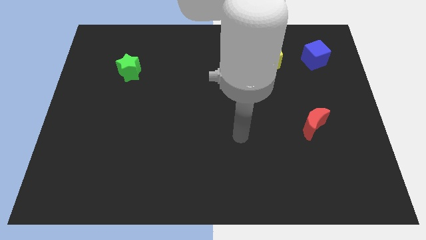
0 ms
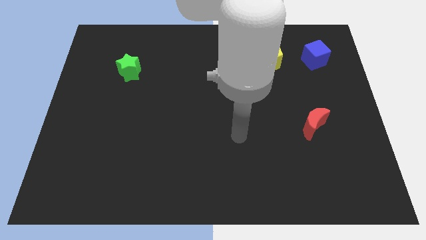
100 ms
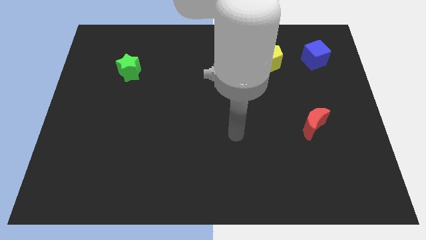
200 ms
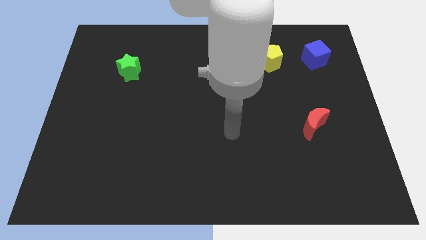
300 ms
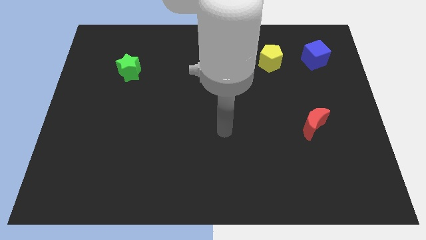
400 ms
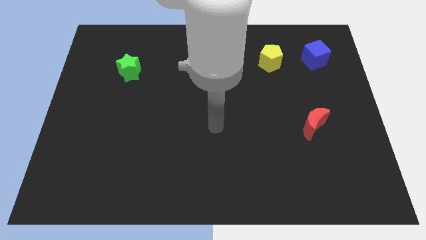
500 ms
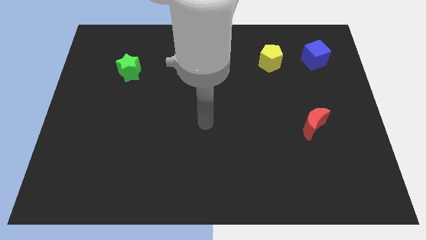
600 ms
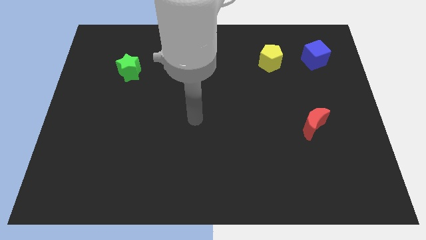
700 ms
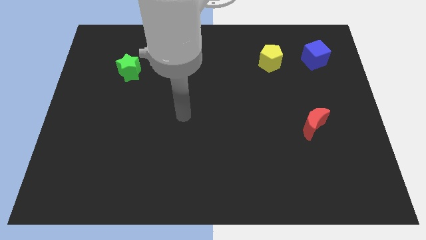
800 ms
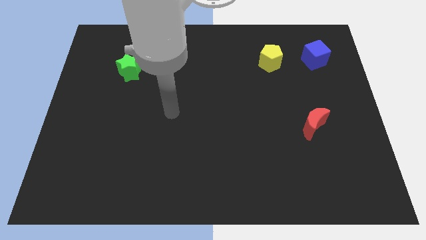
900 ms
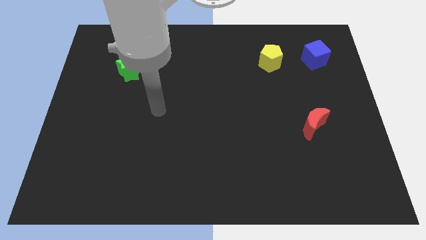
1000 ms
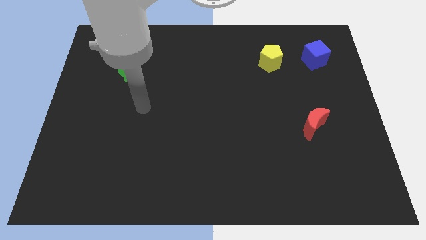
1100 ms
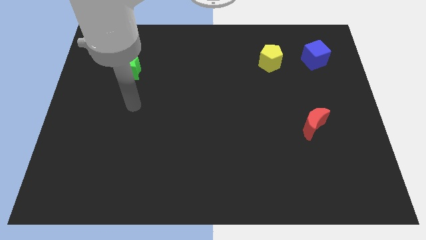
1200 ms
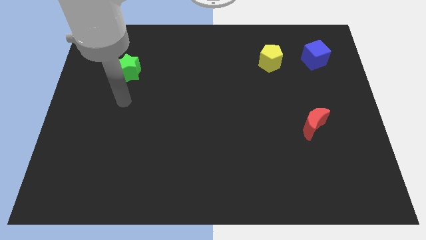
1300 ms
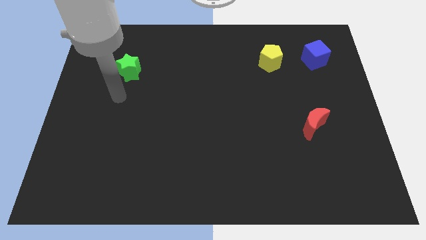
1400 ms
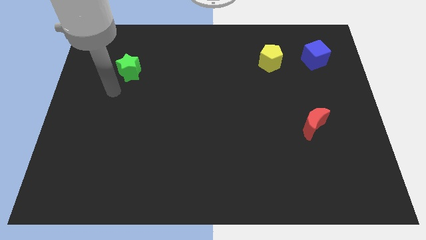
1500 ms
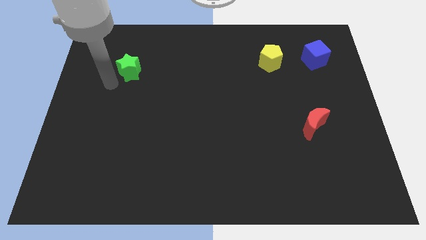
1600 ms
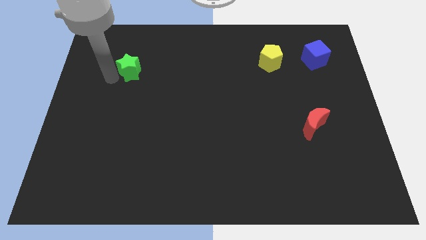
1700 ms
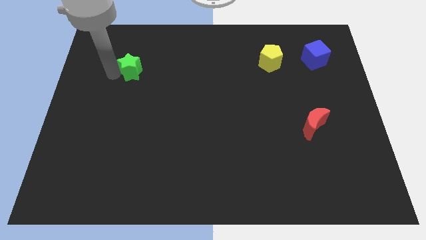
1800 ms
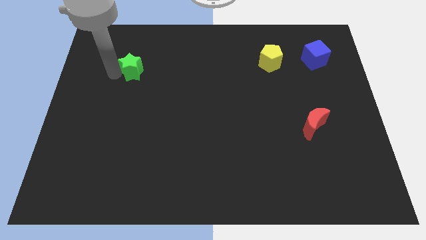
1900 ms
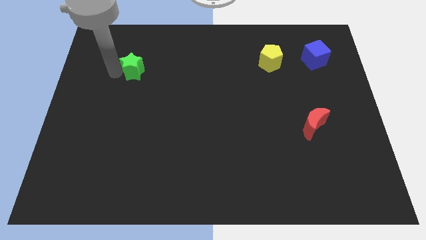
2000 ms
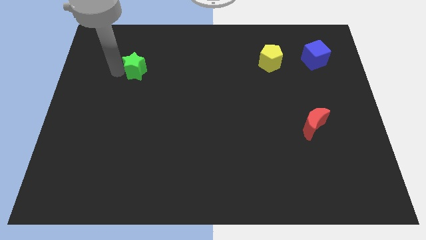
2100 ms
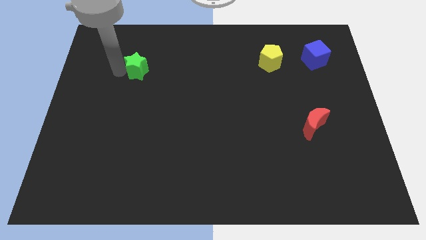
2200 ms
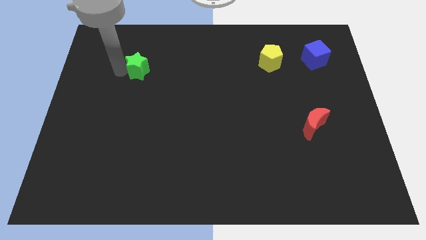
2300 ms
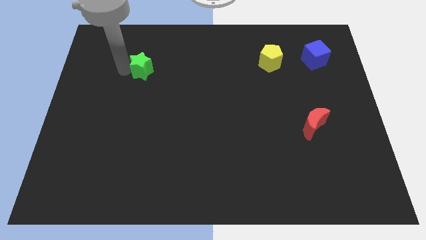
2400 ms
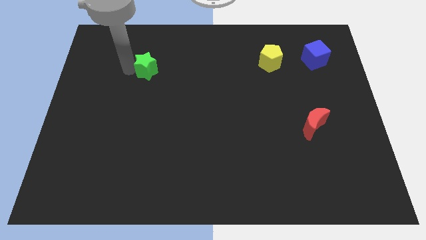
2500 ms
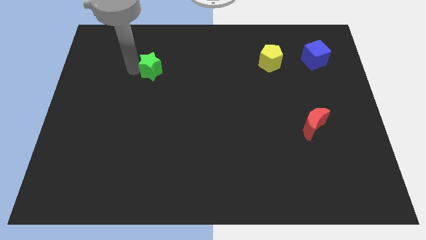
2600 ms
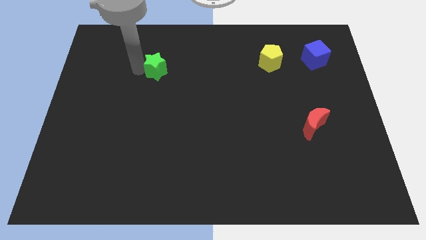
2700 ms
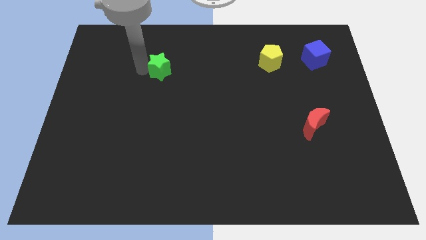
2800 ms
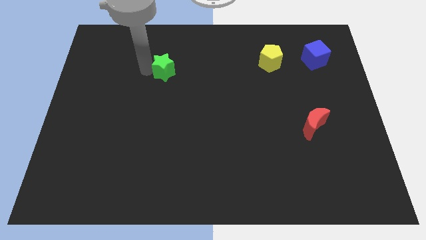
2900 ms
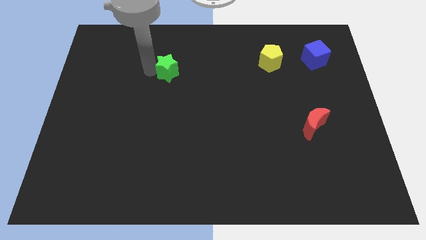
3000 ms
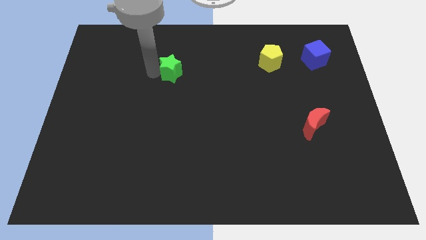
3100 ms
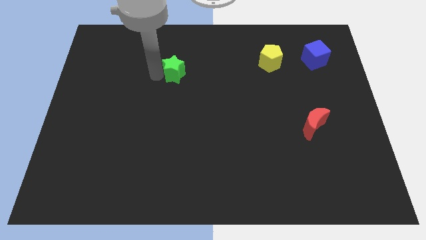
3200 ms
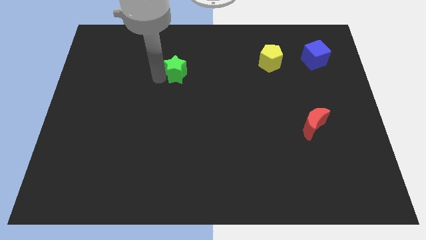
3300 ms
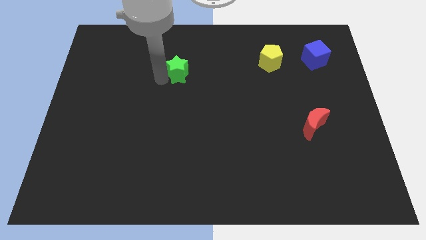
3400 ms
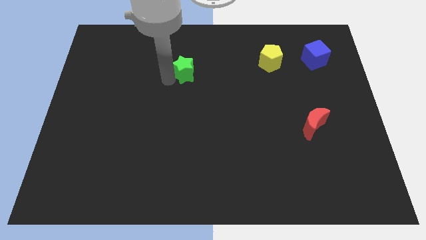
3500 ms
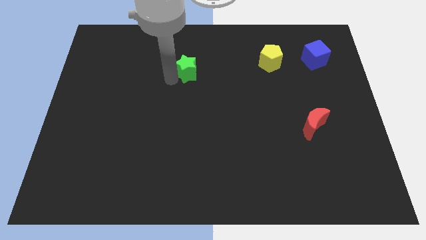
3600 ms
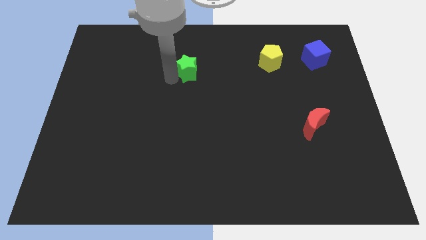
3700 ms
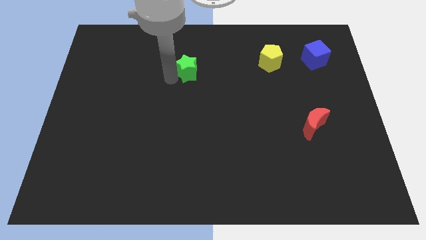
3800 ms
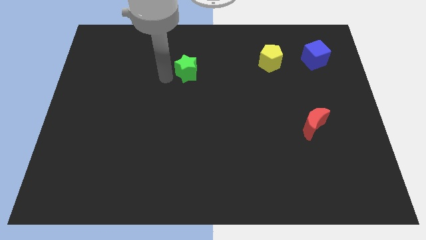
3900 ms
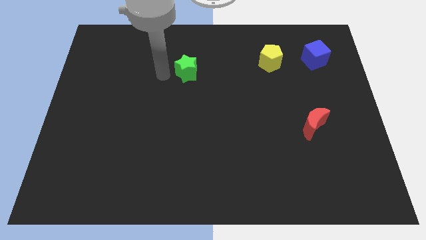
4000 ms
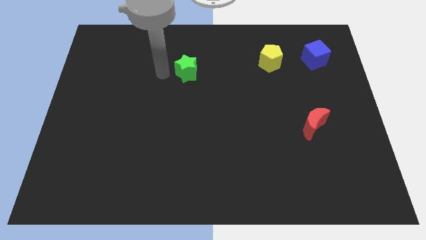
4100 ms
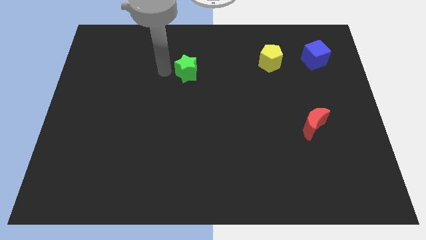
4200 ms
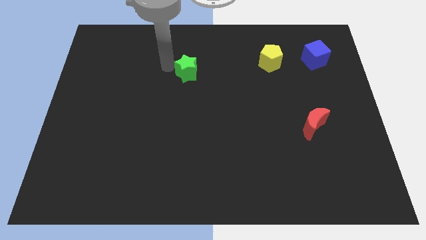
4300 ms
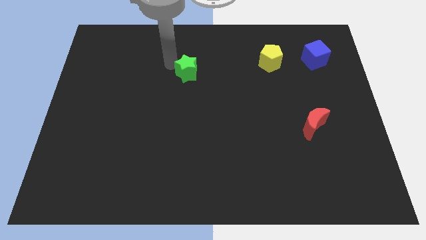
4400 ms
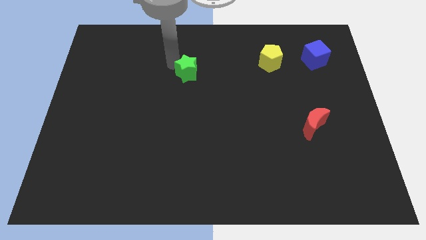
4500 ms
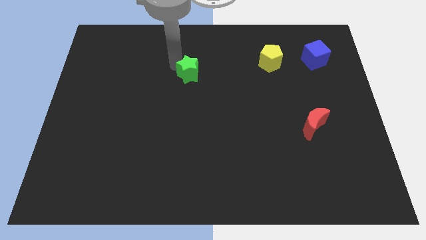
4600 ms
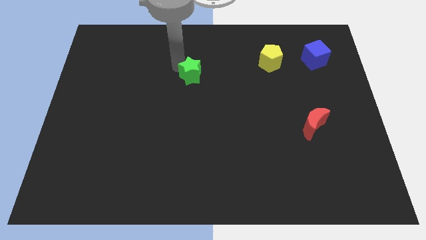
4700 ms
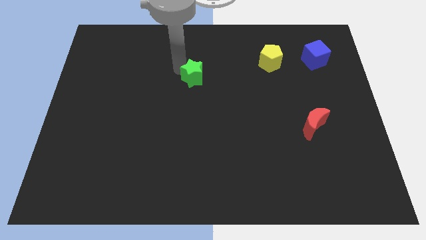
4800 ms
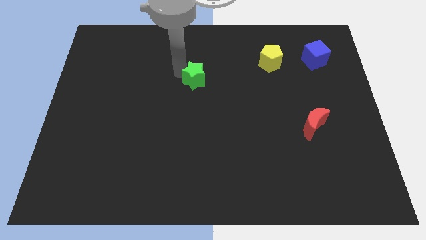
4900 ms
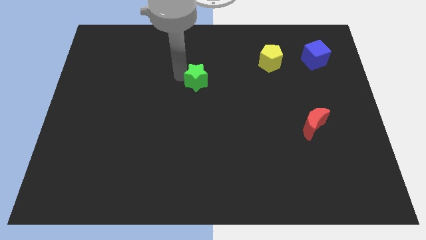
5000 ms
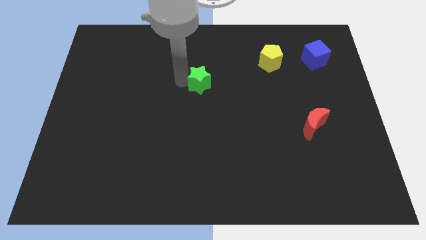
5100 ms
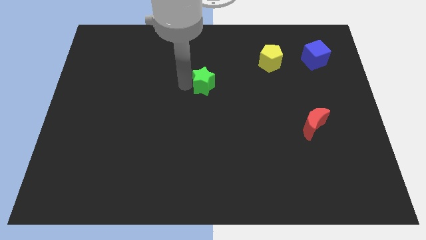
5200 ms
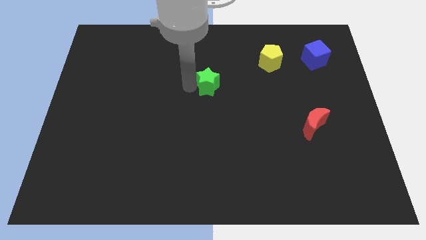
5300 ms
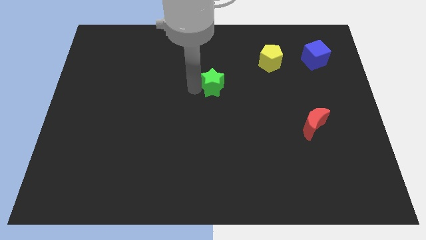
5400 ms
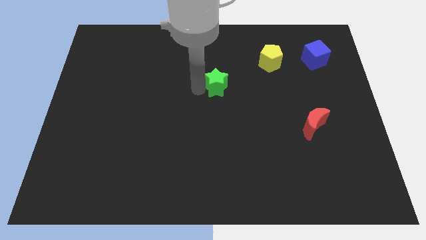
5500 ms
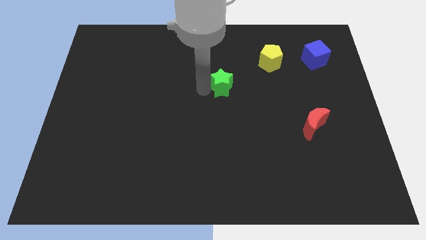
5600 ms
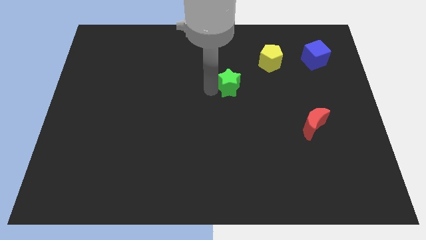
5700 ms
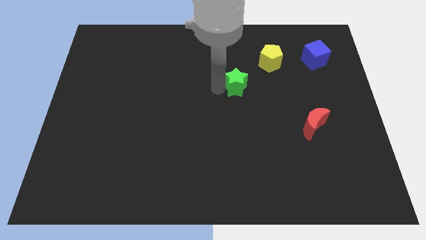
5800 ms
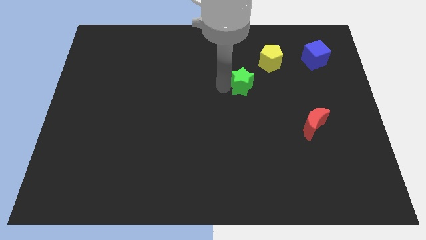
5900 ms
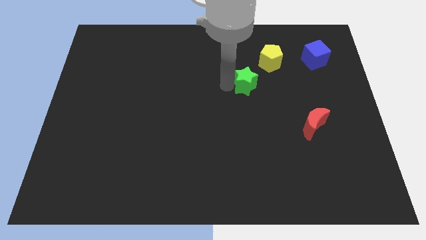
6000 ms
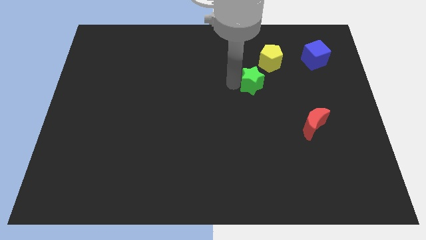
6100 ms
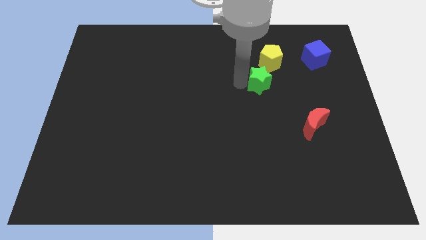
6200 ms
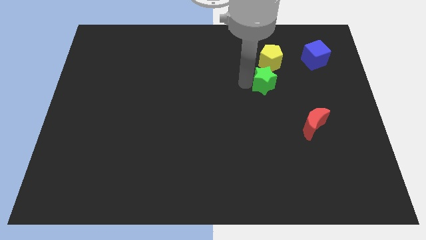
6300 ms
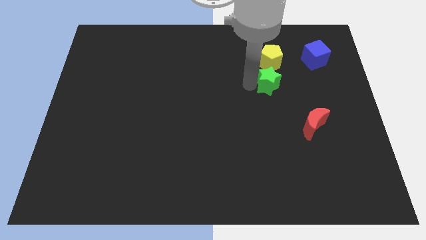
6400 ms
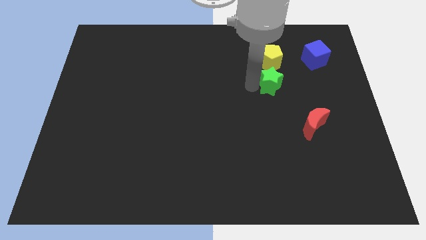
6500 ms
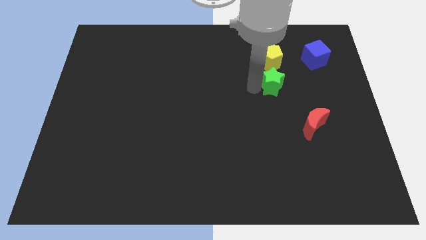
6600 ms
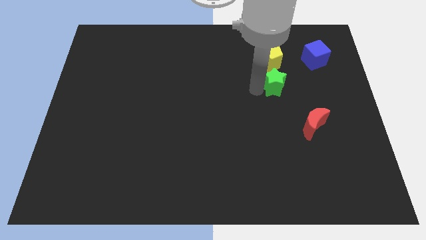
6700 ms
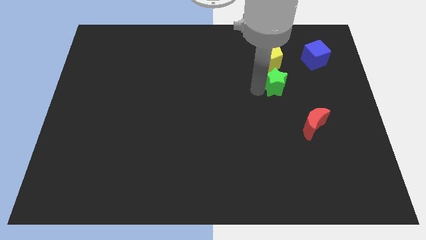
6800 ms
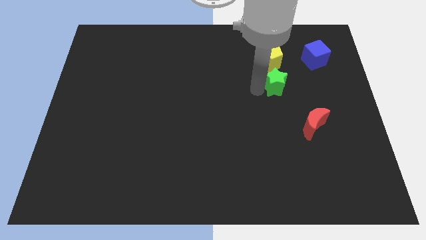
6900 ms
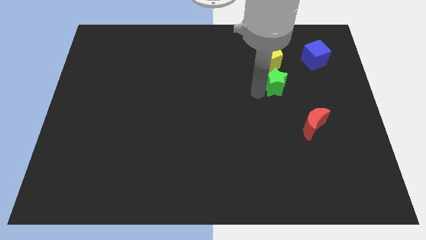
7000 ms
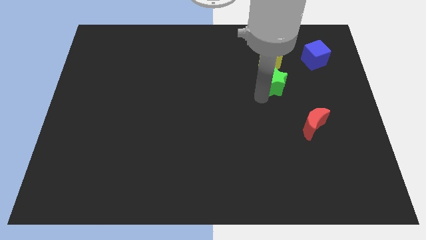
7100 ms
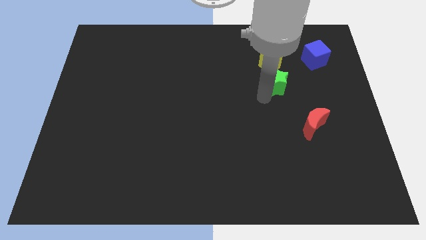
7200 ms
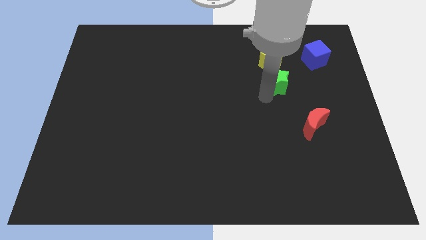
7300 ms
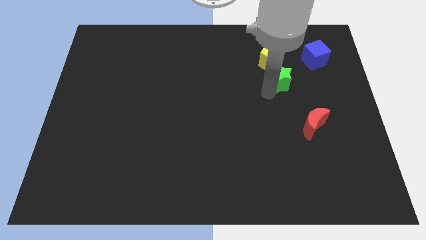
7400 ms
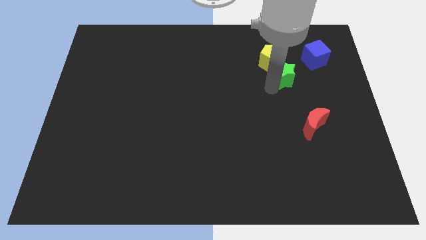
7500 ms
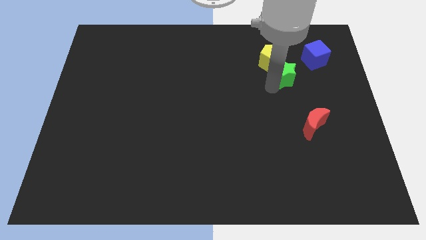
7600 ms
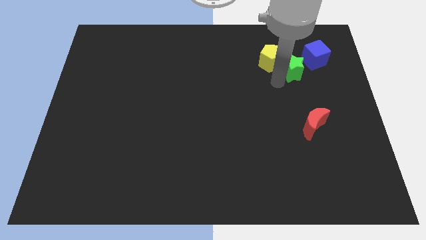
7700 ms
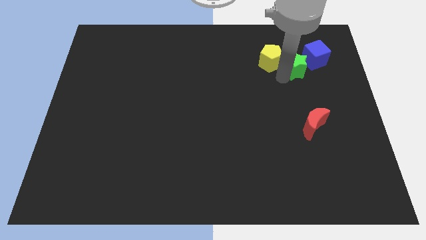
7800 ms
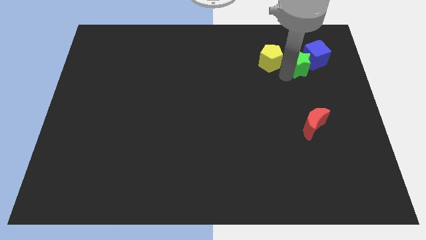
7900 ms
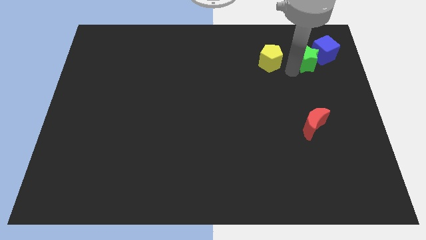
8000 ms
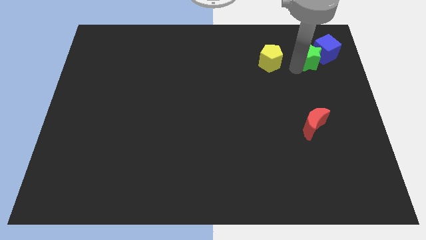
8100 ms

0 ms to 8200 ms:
push the star towards the blue block

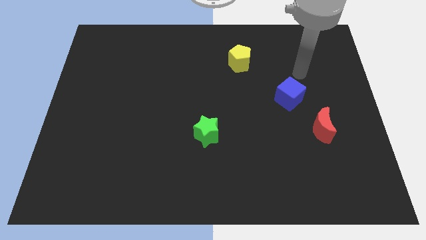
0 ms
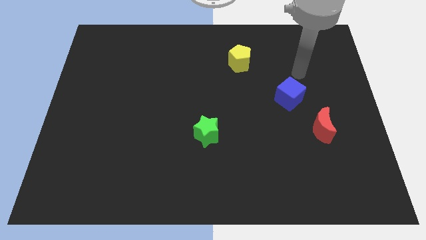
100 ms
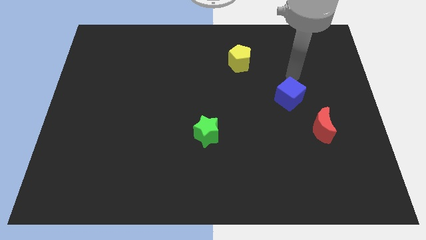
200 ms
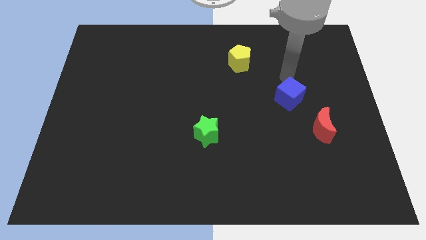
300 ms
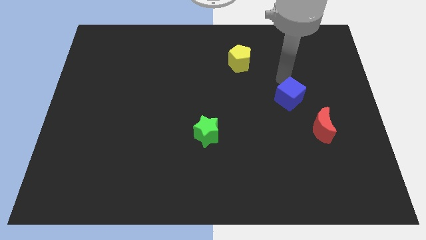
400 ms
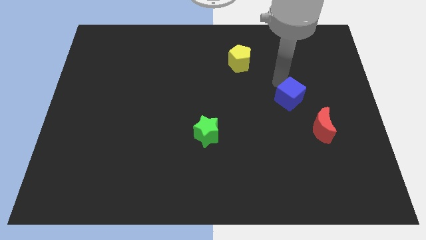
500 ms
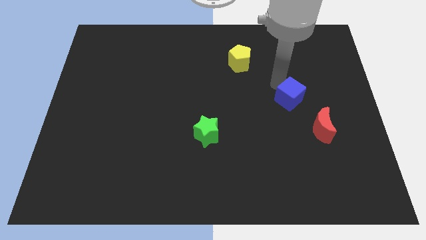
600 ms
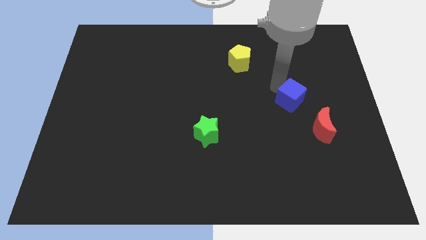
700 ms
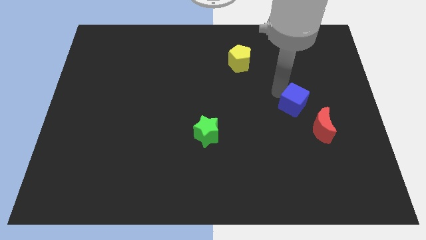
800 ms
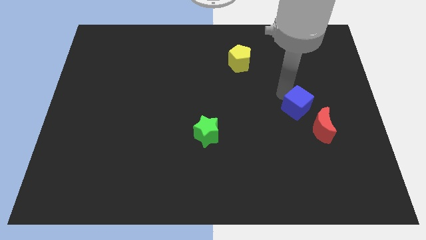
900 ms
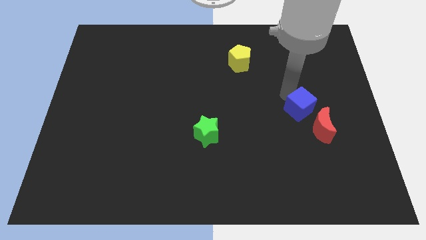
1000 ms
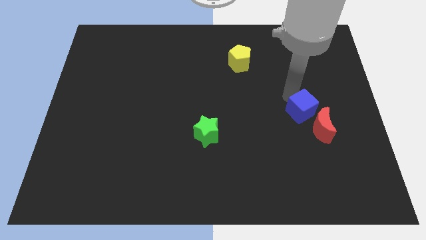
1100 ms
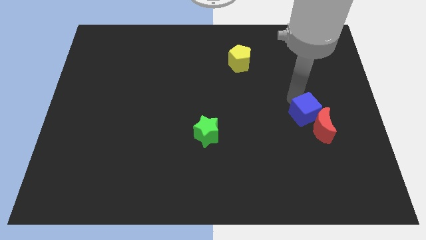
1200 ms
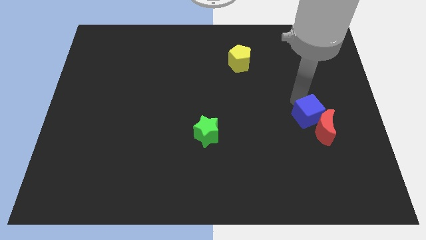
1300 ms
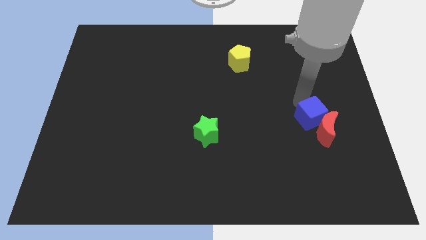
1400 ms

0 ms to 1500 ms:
move the cube to the moon
